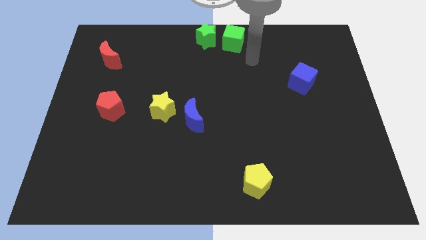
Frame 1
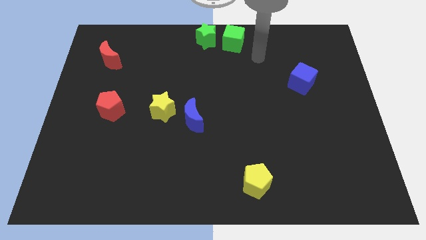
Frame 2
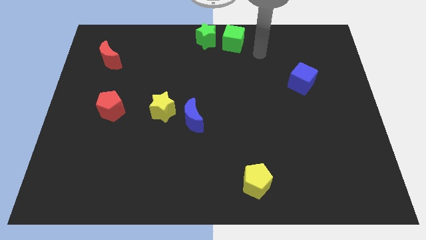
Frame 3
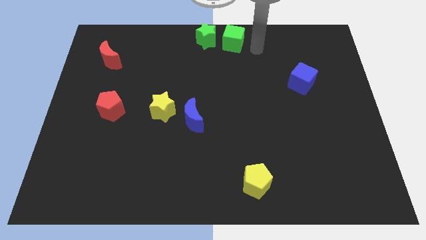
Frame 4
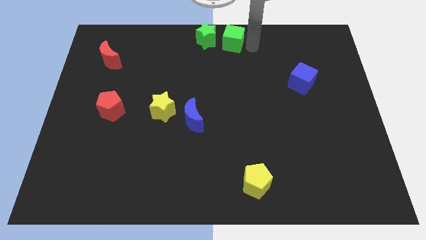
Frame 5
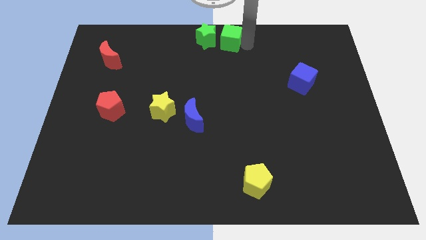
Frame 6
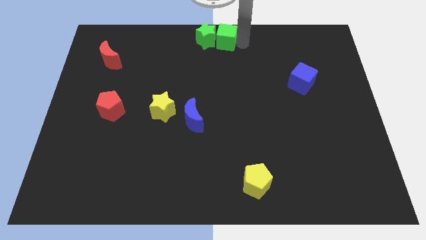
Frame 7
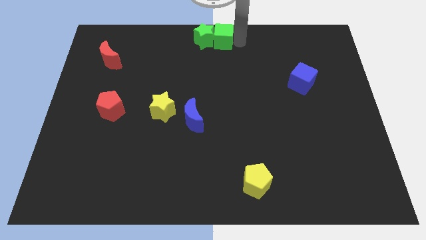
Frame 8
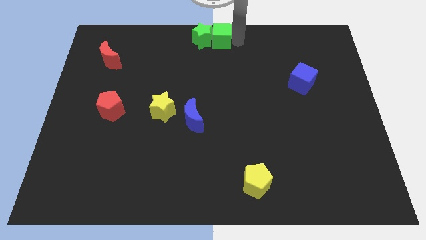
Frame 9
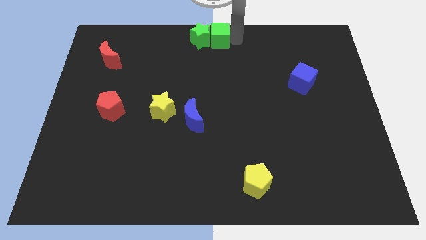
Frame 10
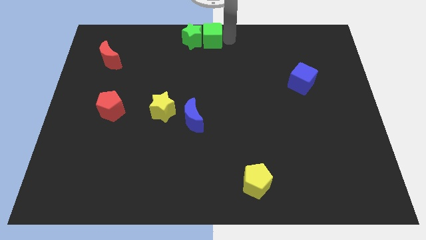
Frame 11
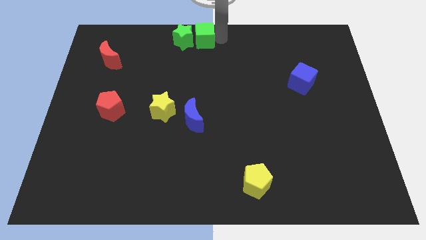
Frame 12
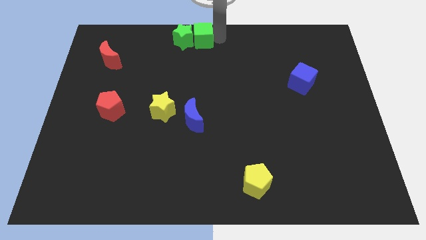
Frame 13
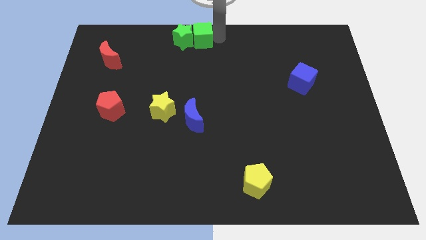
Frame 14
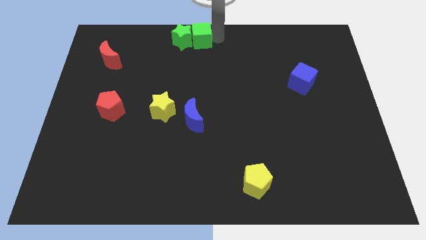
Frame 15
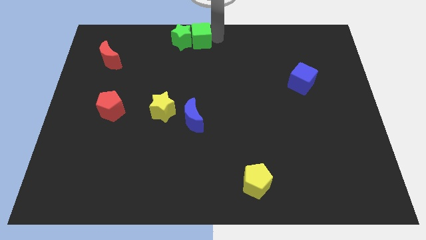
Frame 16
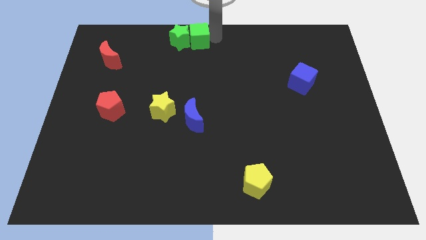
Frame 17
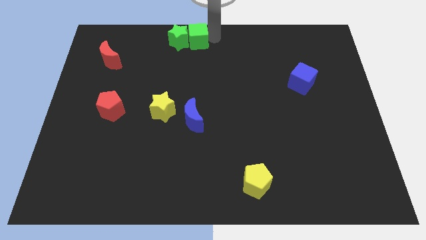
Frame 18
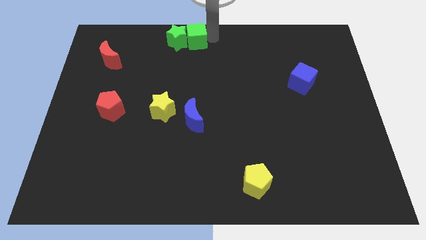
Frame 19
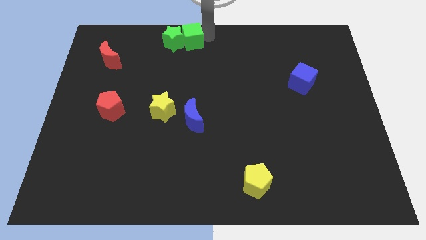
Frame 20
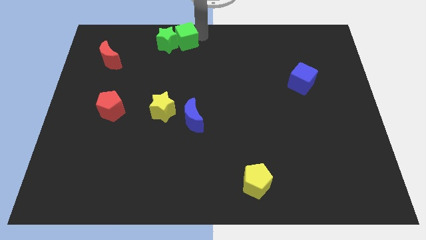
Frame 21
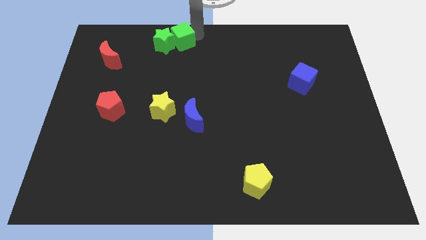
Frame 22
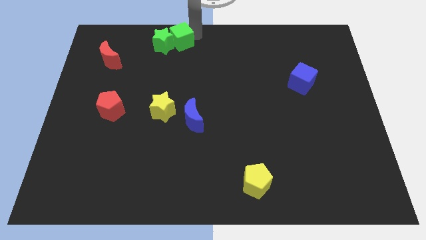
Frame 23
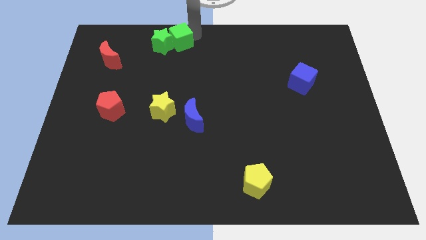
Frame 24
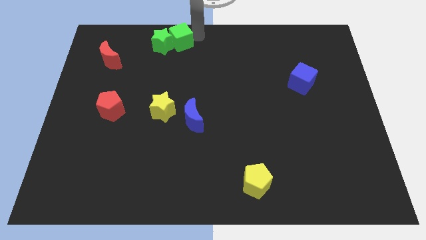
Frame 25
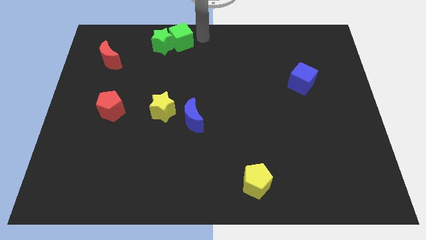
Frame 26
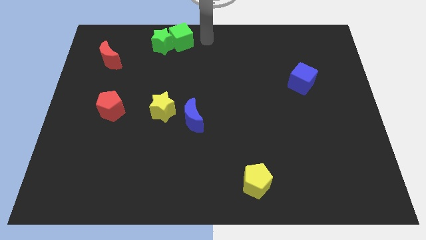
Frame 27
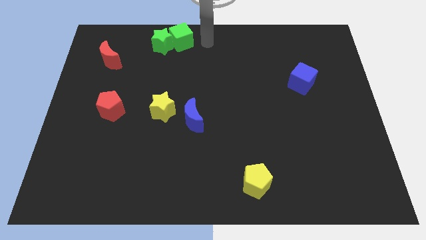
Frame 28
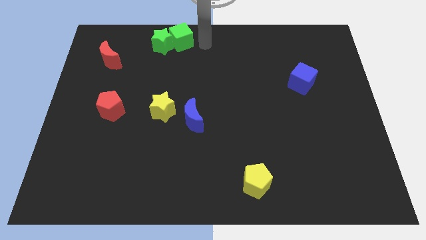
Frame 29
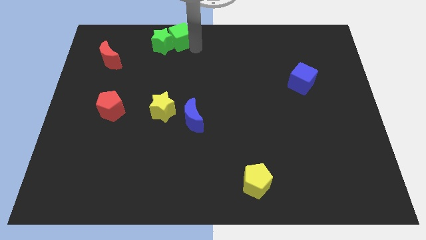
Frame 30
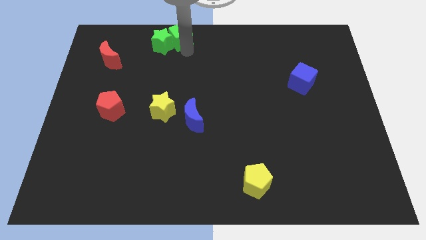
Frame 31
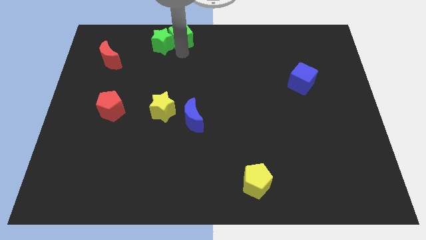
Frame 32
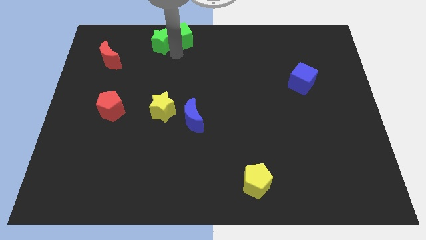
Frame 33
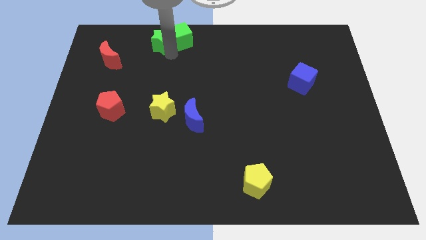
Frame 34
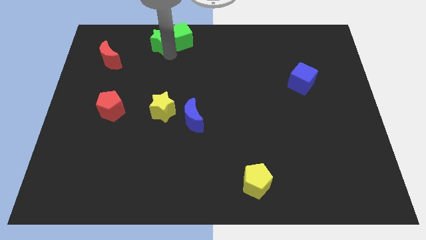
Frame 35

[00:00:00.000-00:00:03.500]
move the green cube into the green star

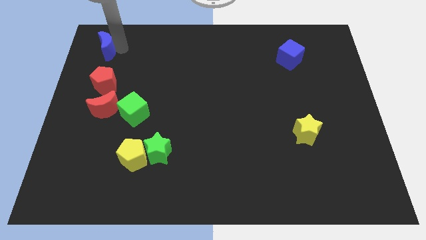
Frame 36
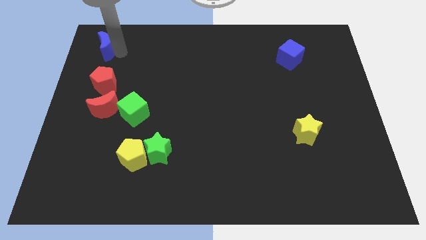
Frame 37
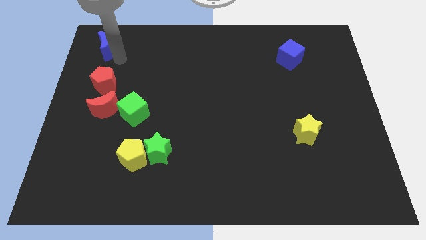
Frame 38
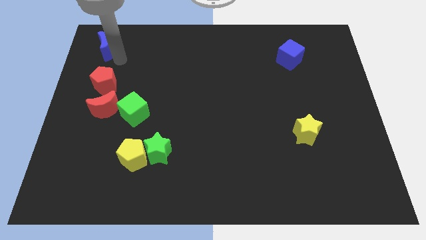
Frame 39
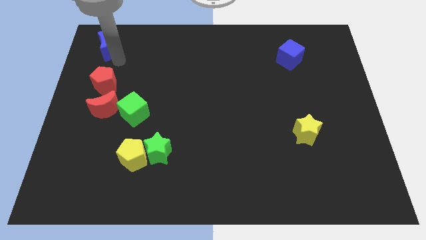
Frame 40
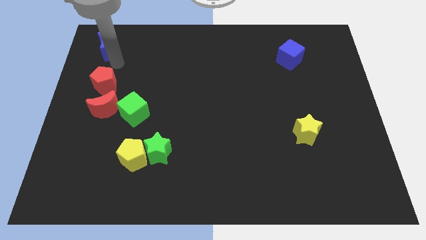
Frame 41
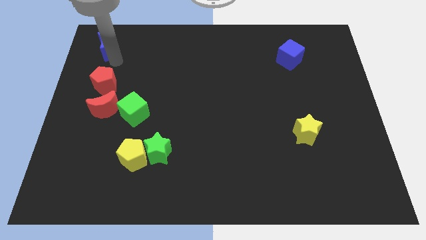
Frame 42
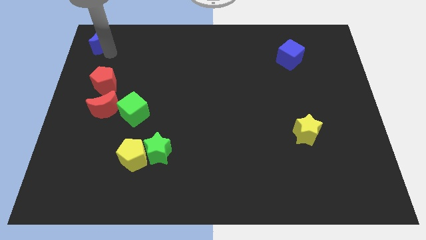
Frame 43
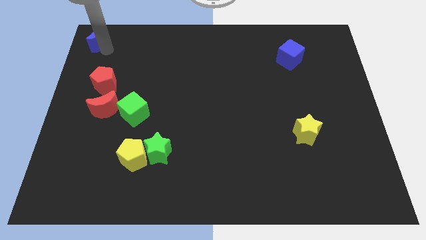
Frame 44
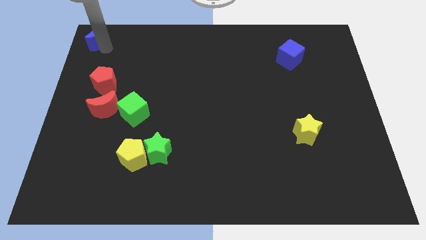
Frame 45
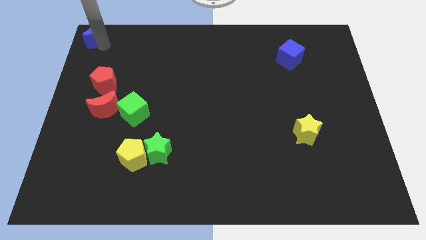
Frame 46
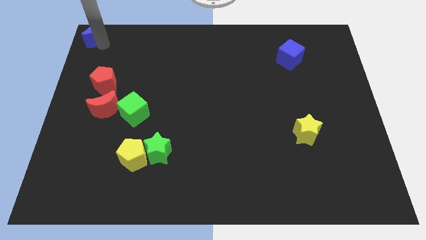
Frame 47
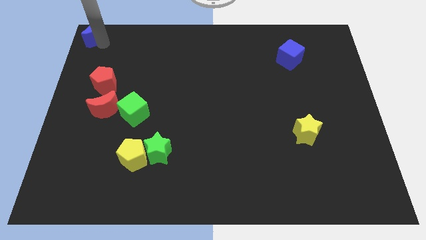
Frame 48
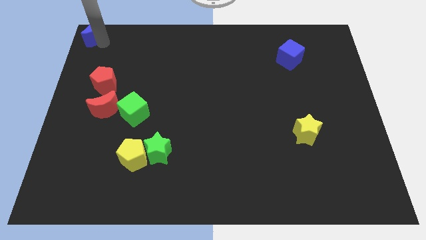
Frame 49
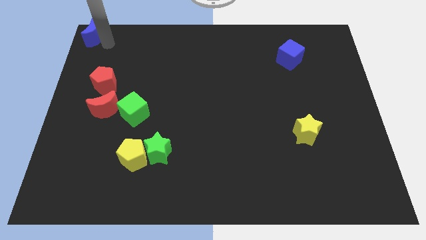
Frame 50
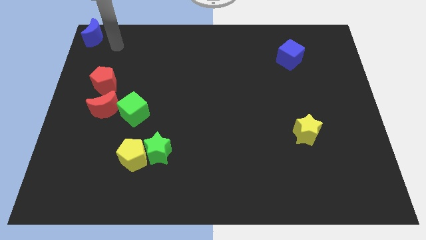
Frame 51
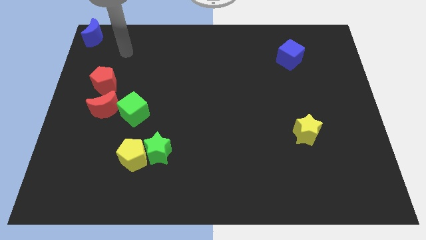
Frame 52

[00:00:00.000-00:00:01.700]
put the blue moon at the top left corner

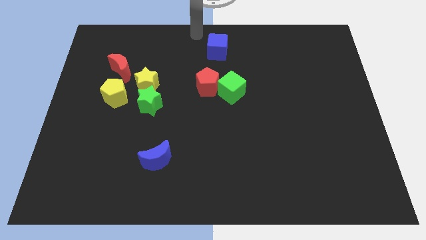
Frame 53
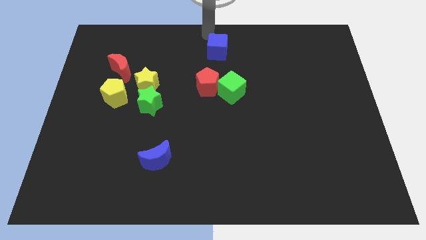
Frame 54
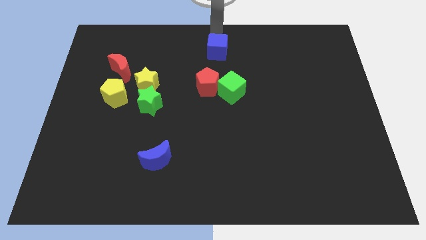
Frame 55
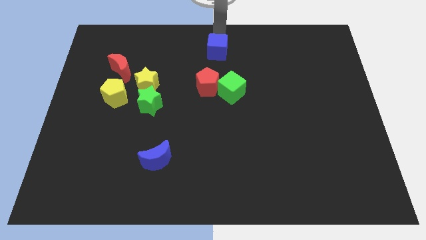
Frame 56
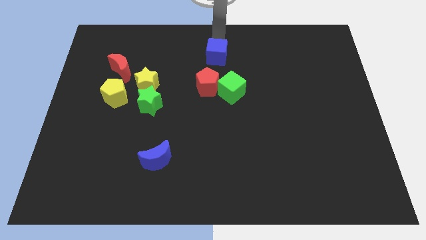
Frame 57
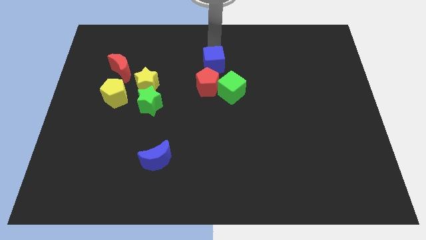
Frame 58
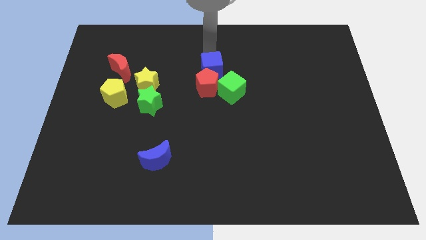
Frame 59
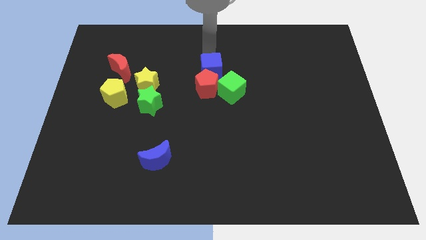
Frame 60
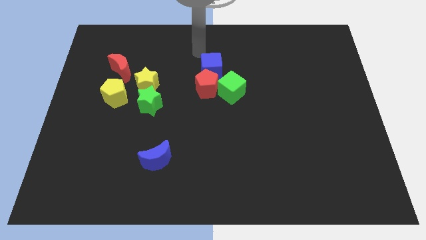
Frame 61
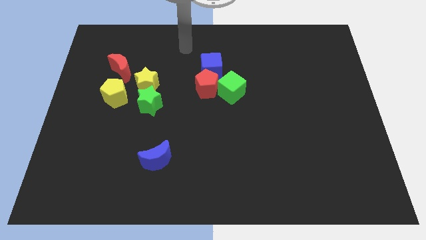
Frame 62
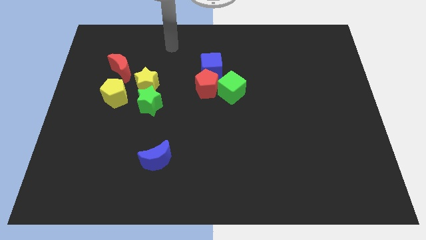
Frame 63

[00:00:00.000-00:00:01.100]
move blue cube into the red pentagon

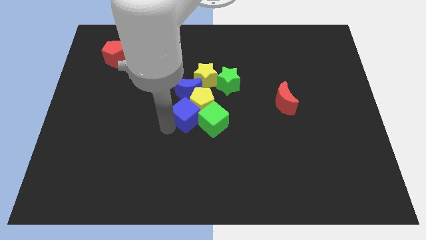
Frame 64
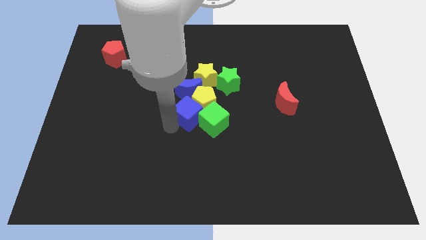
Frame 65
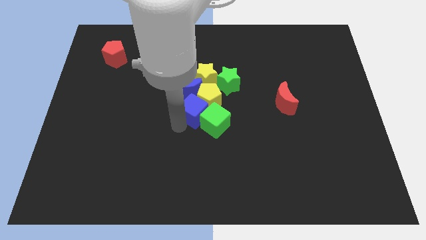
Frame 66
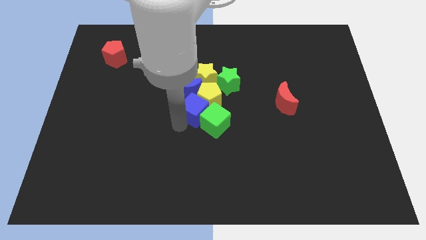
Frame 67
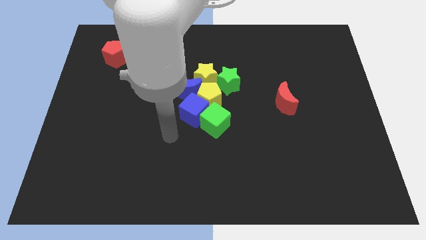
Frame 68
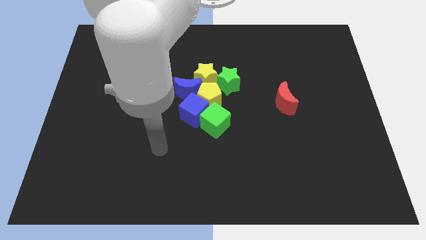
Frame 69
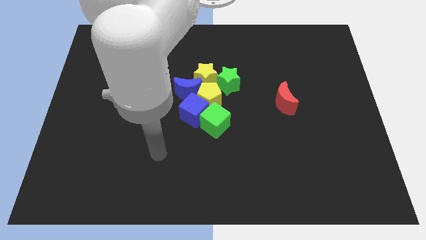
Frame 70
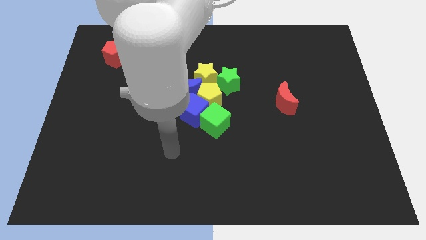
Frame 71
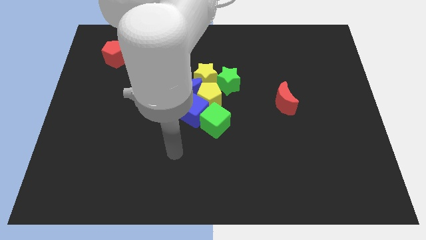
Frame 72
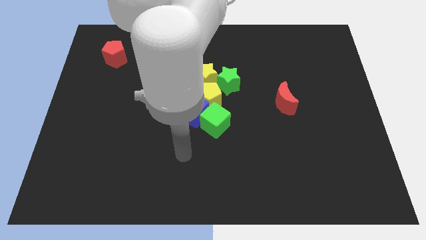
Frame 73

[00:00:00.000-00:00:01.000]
move yourself away from the blue cube towards the bottom

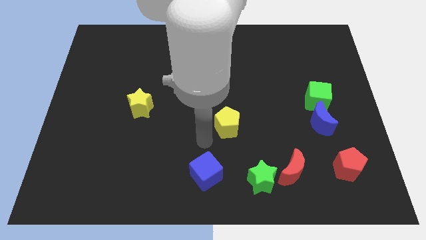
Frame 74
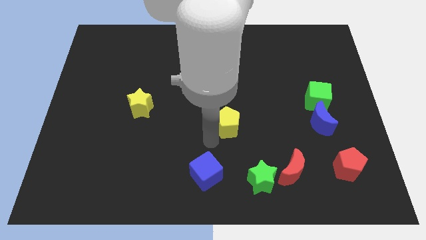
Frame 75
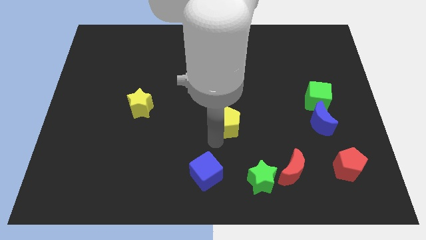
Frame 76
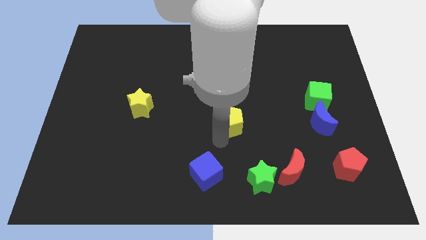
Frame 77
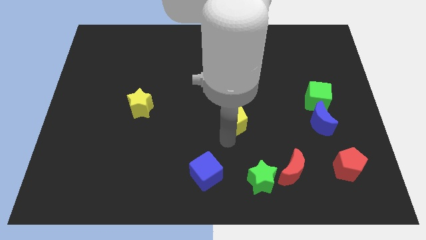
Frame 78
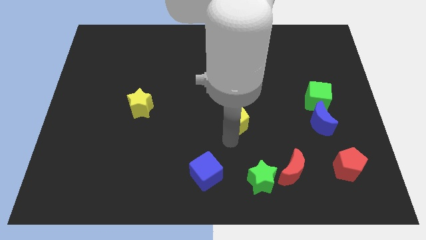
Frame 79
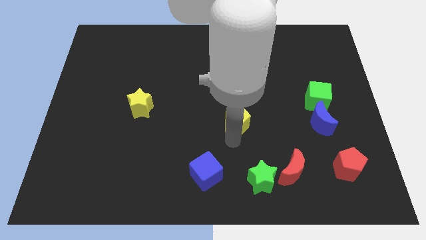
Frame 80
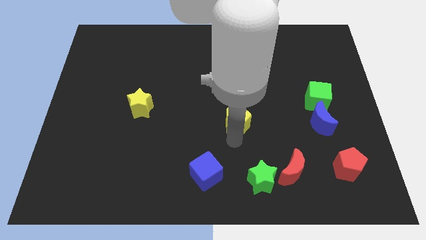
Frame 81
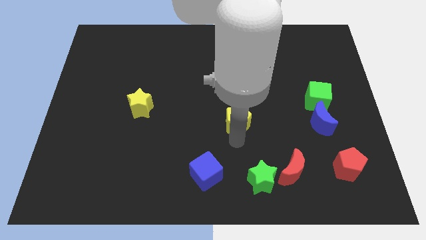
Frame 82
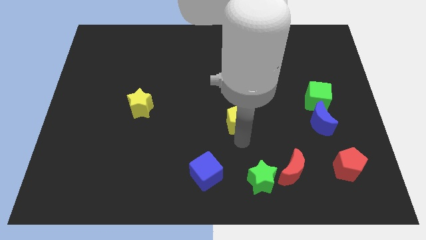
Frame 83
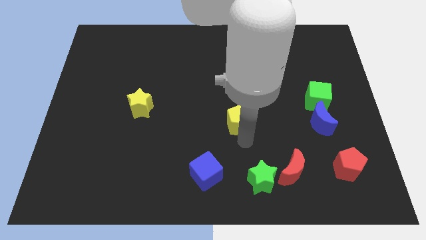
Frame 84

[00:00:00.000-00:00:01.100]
place the yellow pentagon at the top of the green star

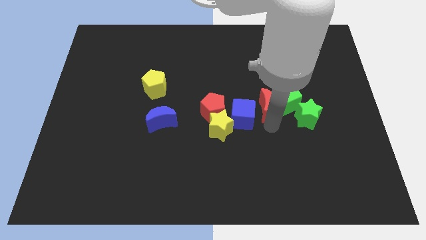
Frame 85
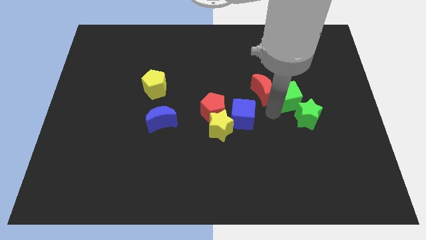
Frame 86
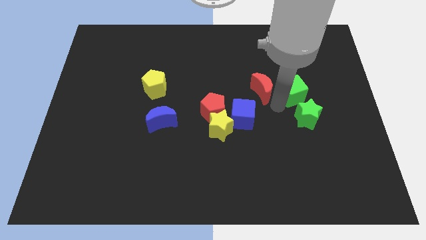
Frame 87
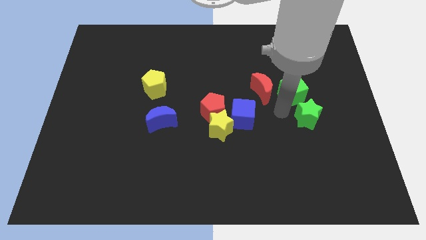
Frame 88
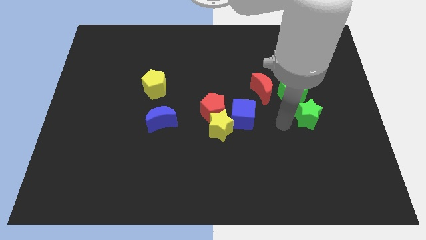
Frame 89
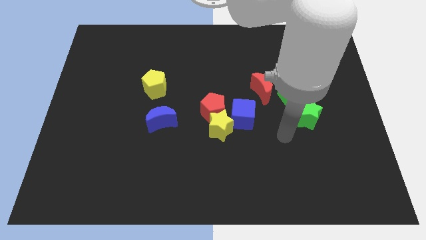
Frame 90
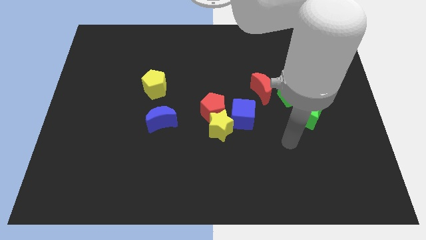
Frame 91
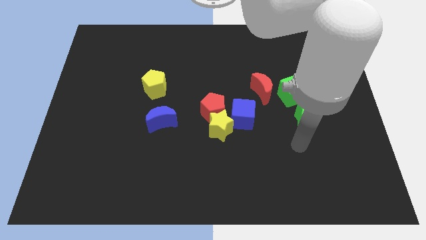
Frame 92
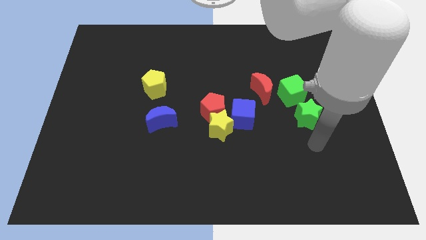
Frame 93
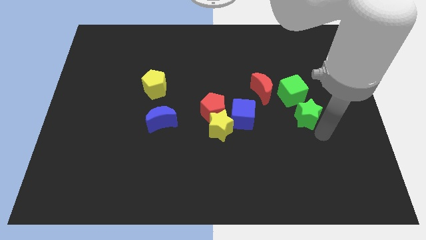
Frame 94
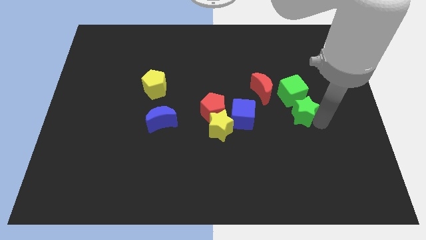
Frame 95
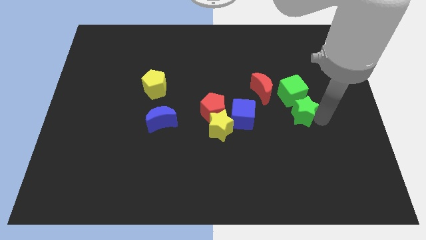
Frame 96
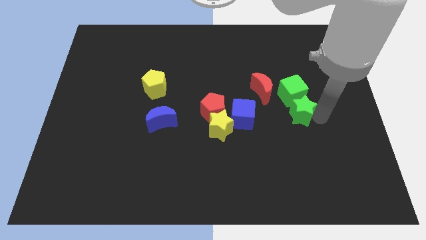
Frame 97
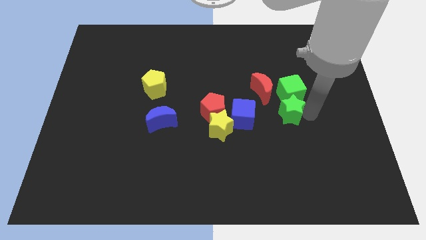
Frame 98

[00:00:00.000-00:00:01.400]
place the green star below the green cube
